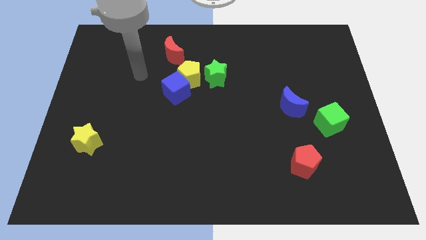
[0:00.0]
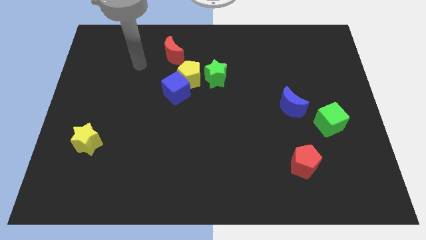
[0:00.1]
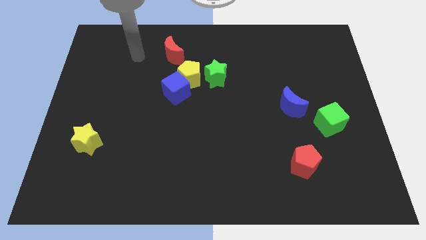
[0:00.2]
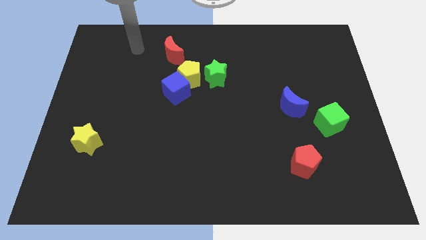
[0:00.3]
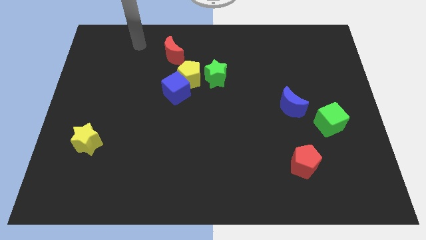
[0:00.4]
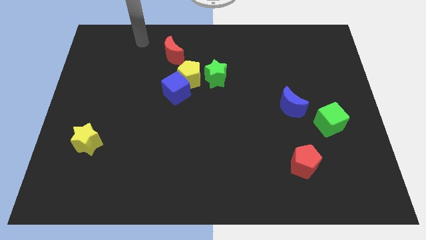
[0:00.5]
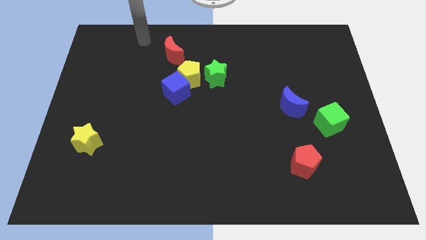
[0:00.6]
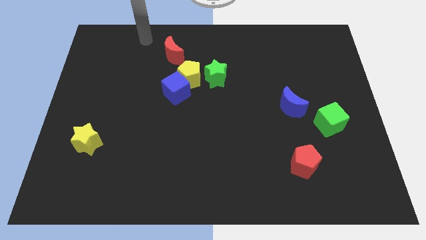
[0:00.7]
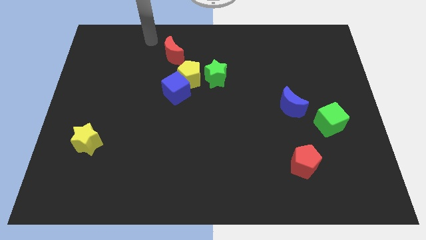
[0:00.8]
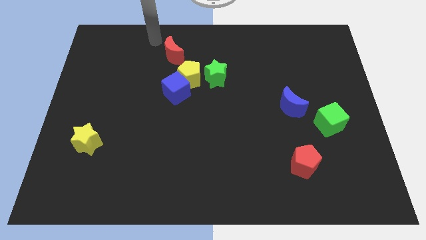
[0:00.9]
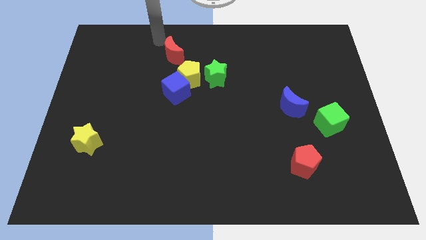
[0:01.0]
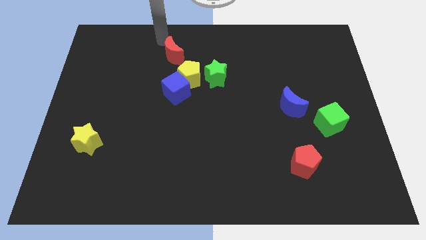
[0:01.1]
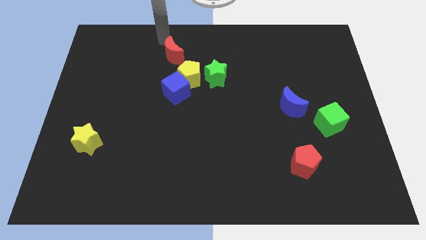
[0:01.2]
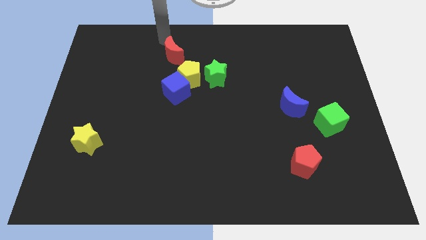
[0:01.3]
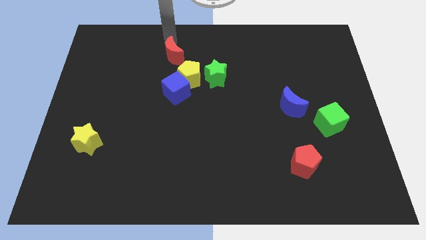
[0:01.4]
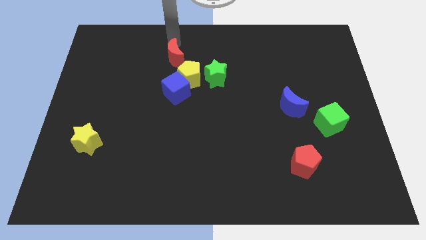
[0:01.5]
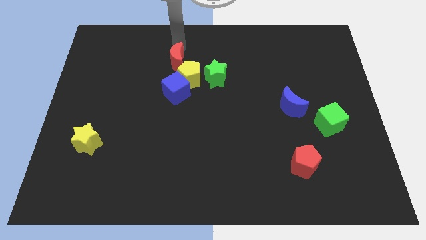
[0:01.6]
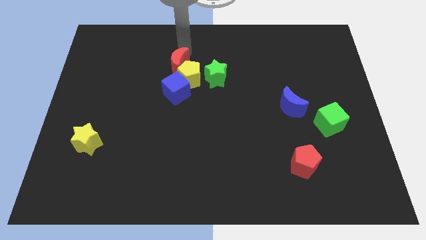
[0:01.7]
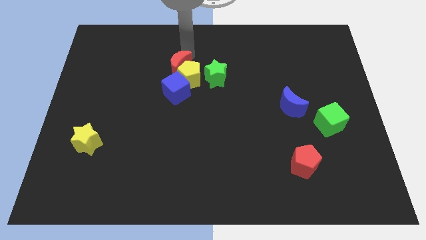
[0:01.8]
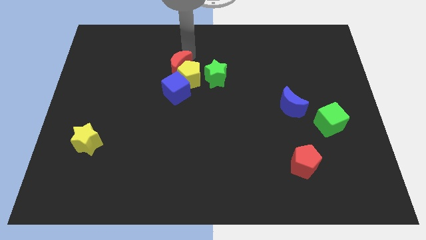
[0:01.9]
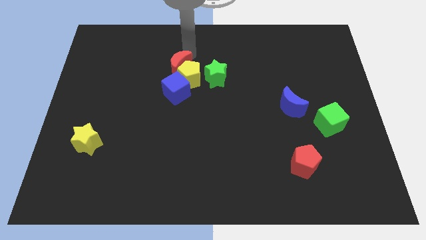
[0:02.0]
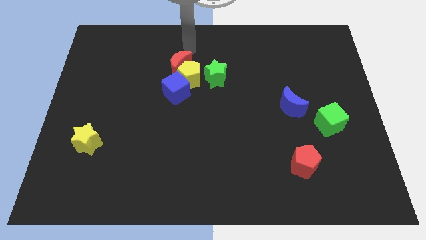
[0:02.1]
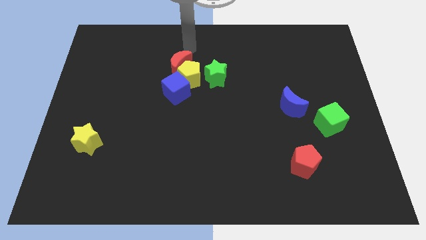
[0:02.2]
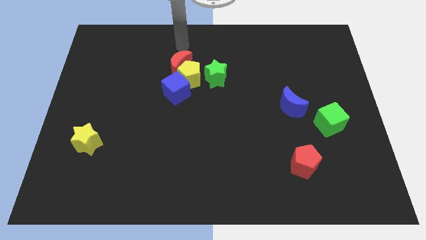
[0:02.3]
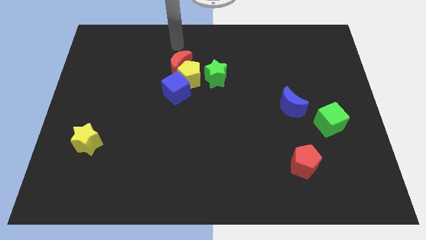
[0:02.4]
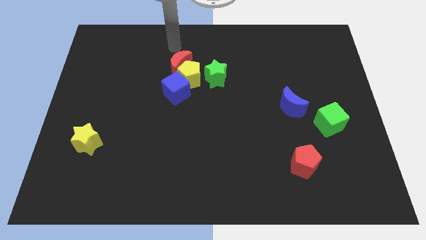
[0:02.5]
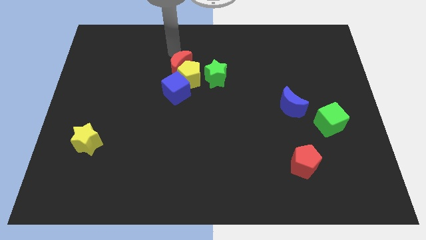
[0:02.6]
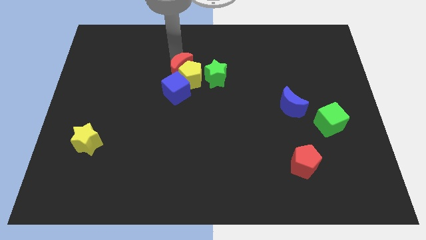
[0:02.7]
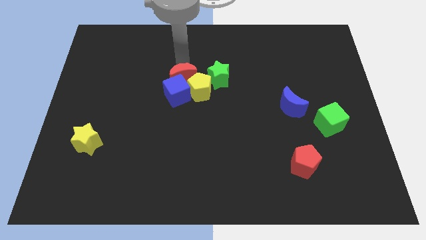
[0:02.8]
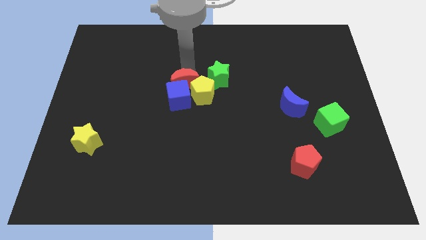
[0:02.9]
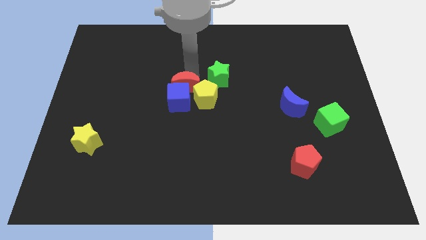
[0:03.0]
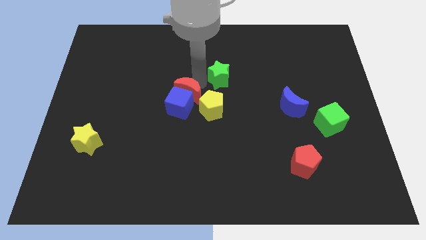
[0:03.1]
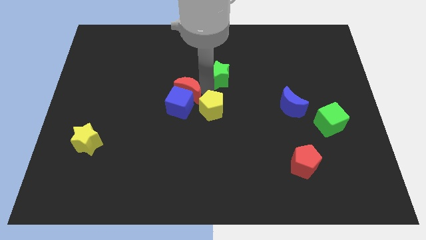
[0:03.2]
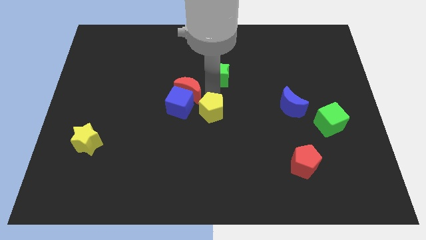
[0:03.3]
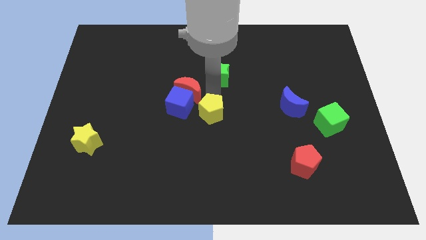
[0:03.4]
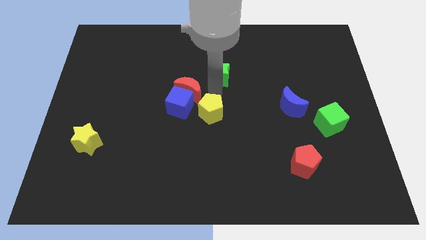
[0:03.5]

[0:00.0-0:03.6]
move the red crescent blue cube and yellow pentagon slightly to the bottom side of the board

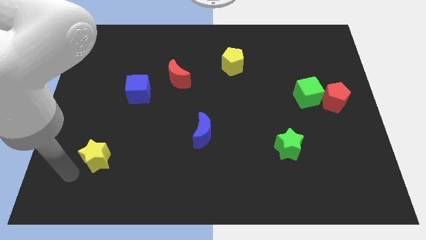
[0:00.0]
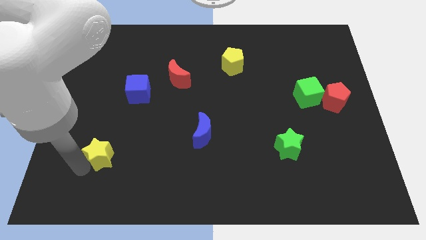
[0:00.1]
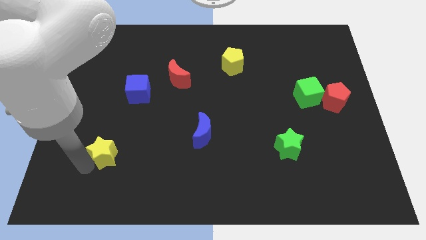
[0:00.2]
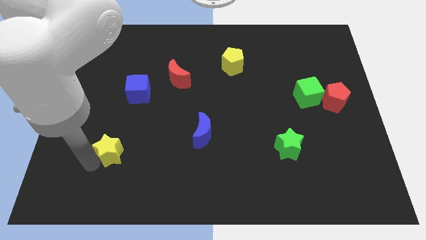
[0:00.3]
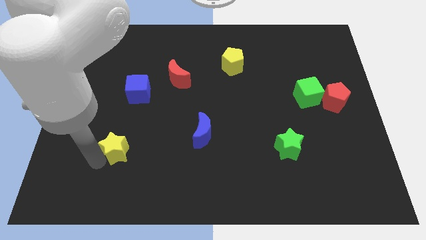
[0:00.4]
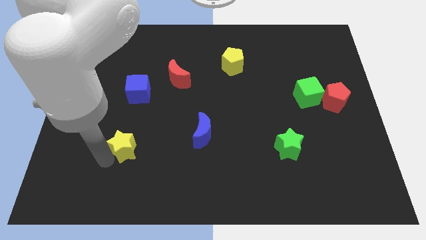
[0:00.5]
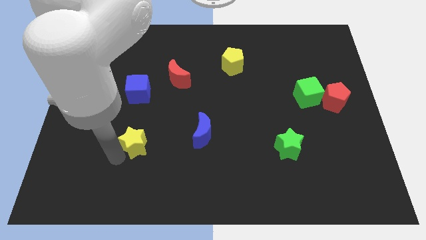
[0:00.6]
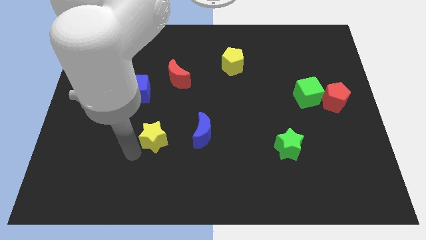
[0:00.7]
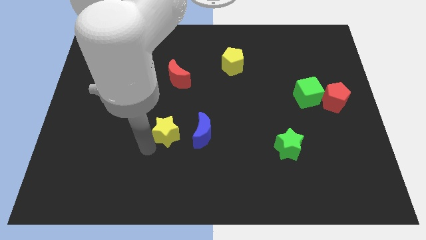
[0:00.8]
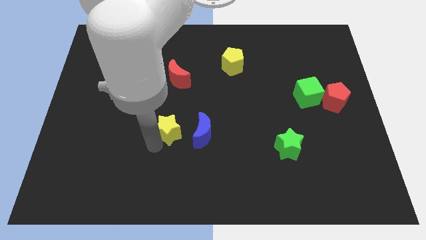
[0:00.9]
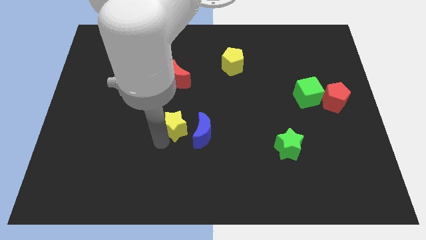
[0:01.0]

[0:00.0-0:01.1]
push the yellow star to the left of blue crescent

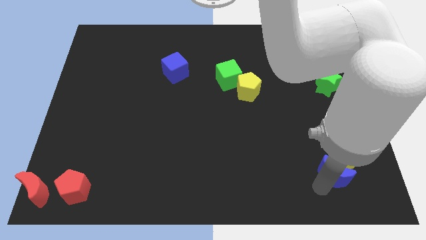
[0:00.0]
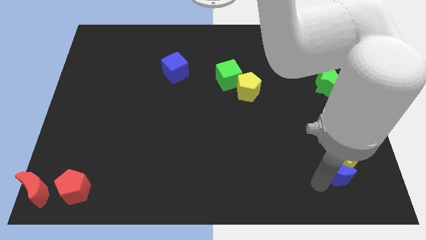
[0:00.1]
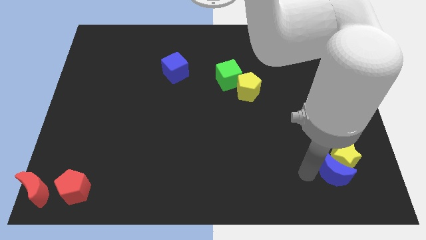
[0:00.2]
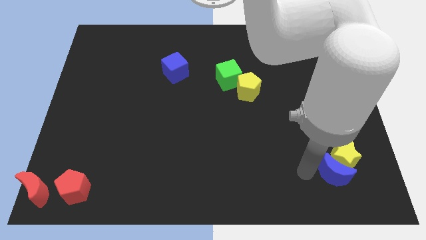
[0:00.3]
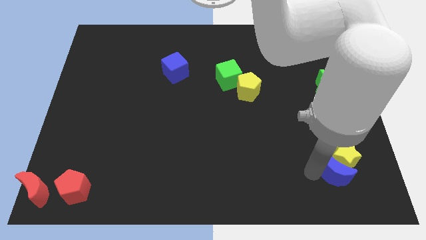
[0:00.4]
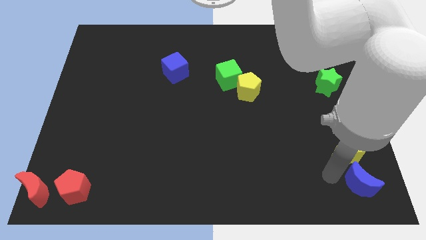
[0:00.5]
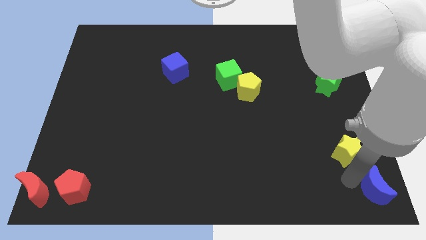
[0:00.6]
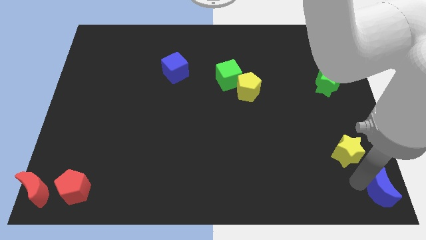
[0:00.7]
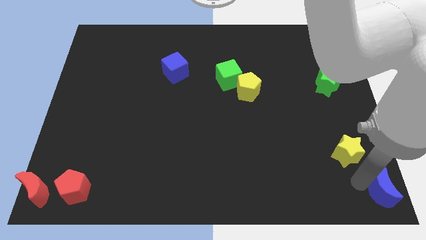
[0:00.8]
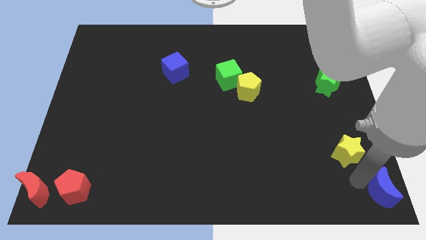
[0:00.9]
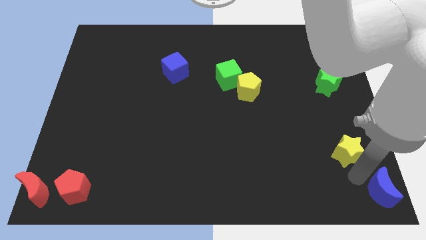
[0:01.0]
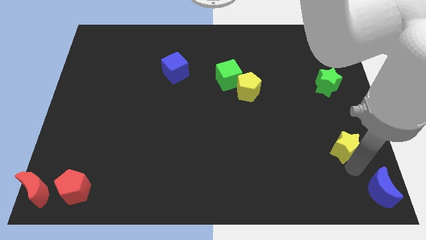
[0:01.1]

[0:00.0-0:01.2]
move the blue crescent to the bottom right corner of the board

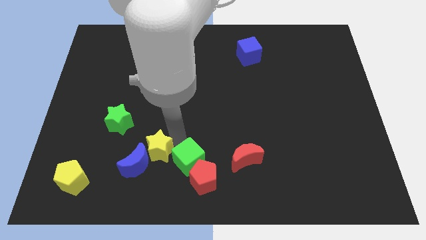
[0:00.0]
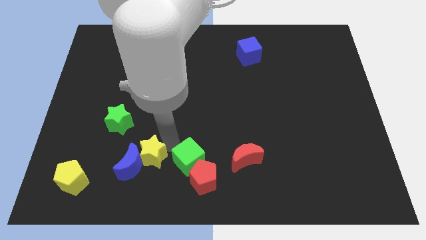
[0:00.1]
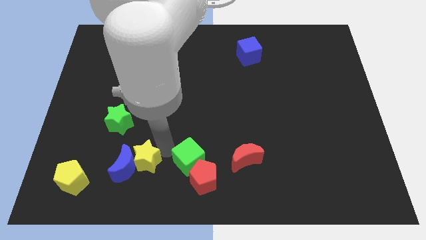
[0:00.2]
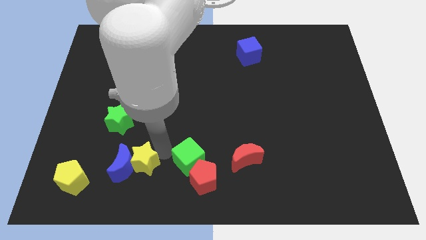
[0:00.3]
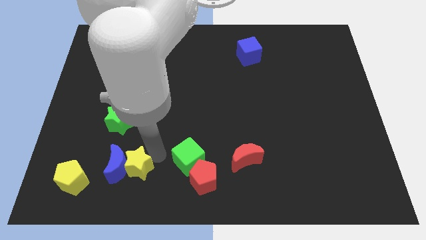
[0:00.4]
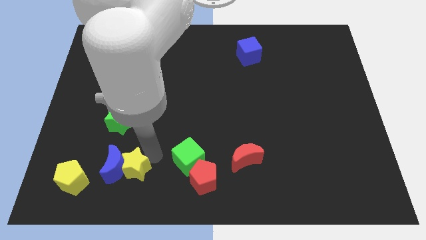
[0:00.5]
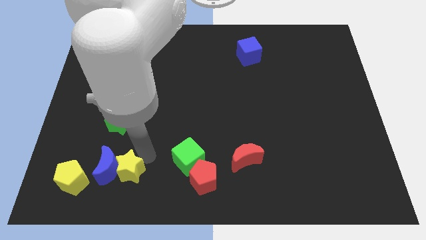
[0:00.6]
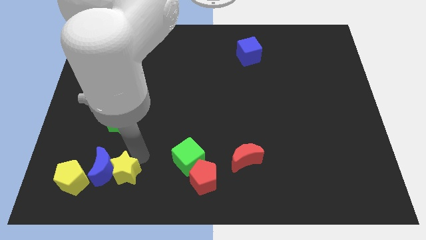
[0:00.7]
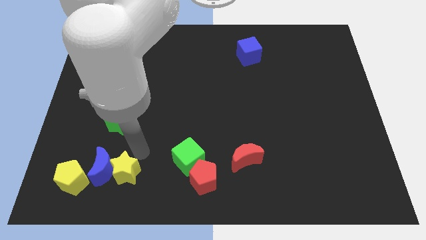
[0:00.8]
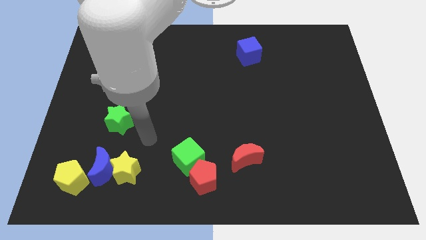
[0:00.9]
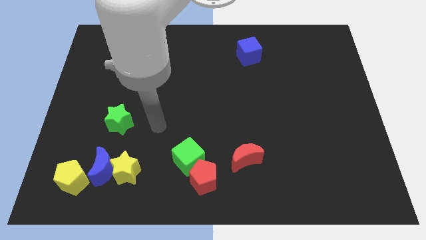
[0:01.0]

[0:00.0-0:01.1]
put the yellow star and blue crescent at the top right side of the yellow pentagon

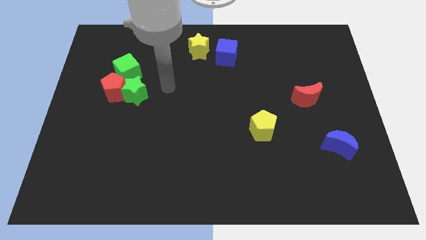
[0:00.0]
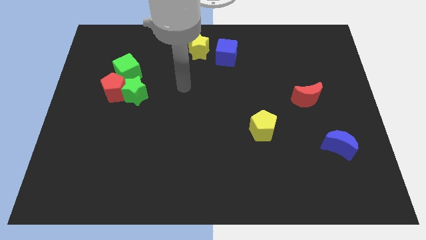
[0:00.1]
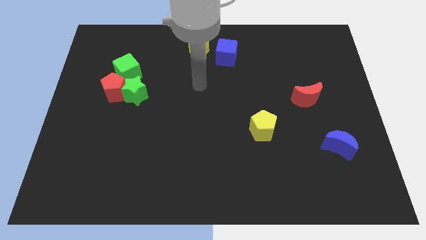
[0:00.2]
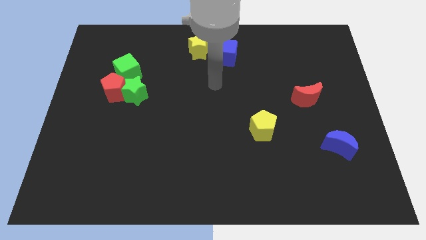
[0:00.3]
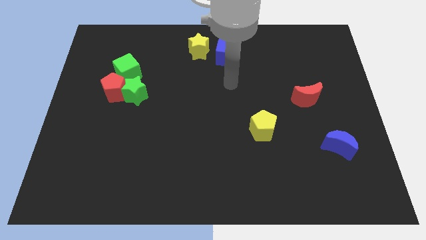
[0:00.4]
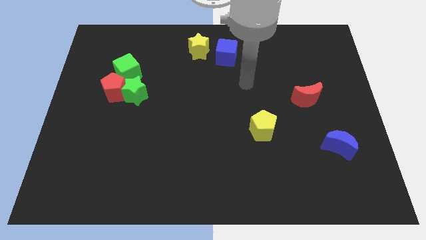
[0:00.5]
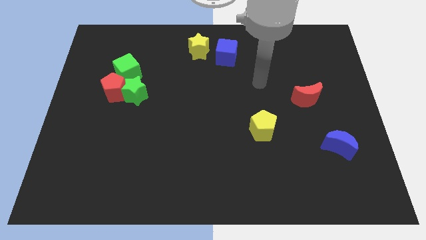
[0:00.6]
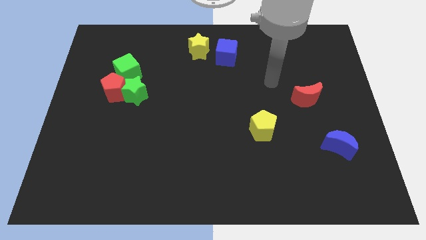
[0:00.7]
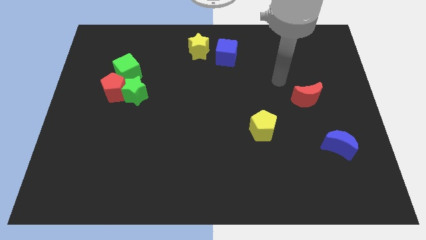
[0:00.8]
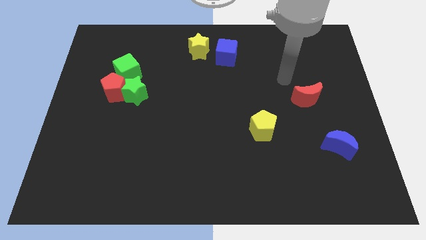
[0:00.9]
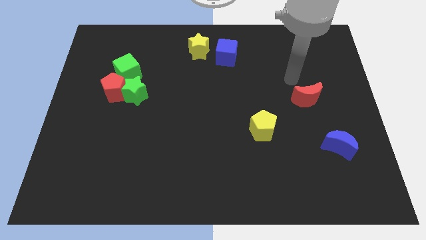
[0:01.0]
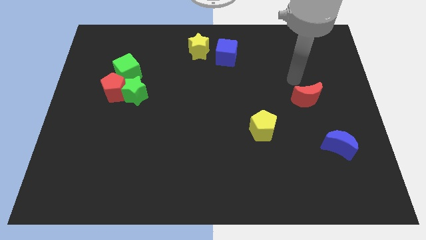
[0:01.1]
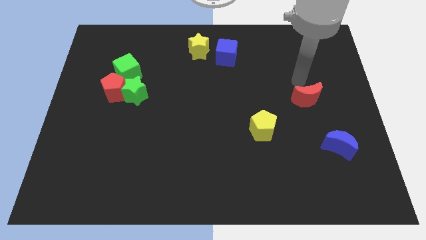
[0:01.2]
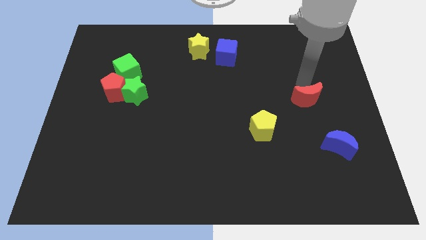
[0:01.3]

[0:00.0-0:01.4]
point your hand above the red moon

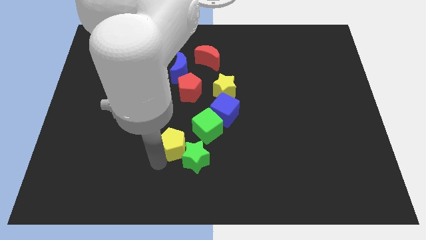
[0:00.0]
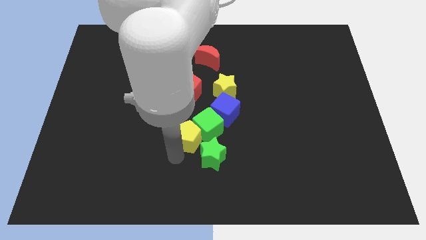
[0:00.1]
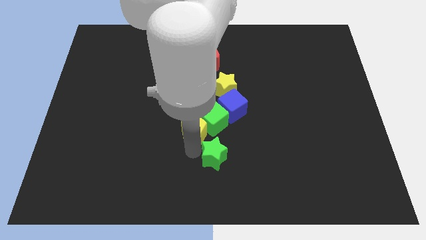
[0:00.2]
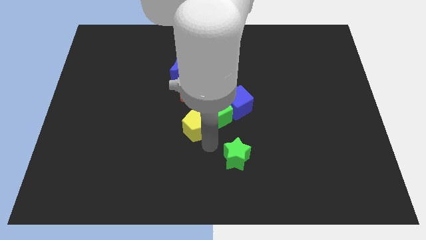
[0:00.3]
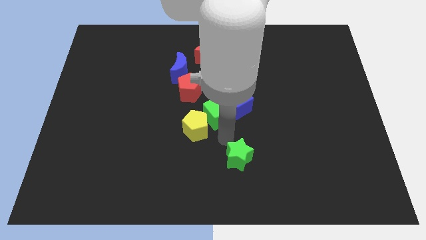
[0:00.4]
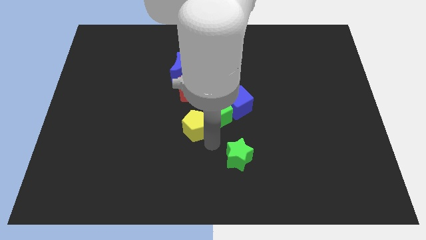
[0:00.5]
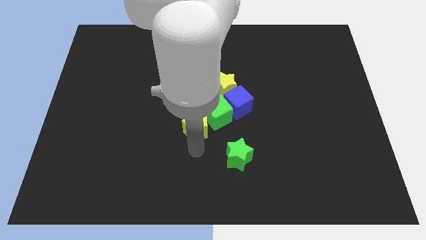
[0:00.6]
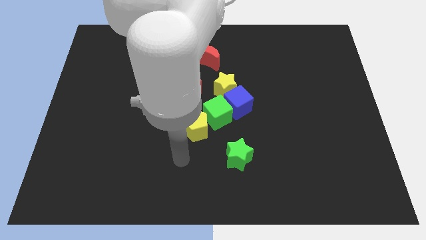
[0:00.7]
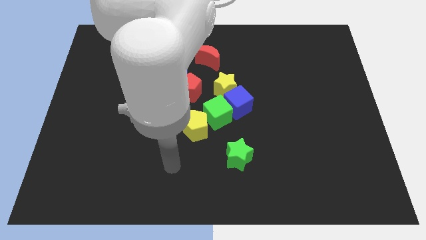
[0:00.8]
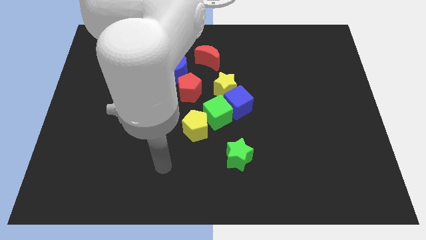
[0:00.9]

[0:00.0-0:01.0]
slide the yellow pentagon into the green cube
